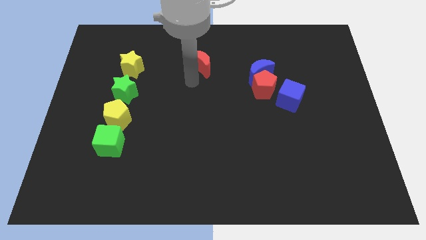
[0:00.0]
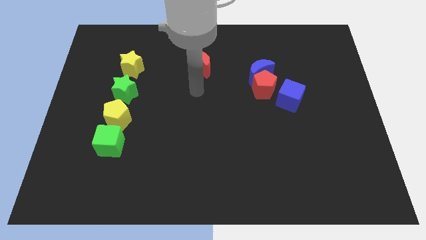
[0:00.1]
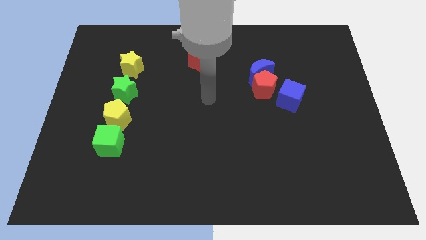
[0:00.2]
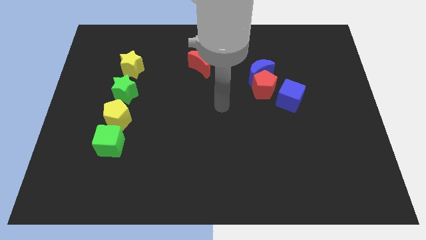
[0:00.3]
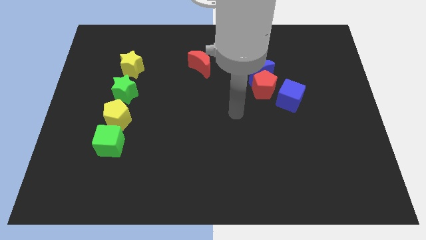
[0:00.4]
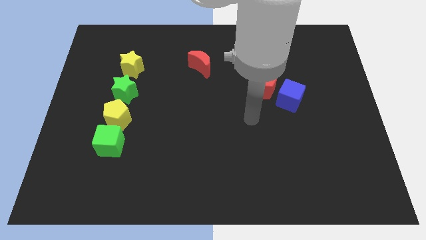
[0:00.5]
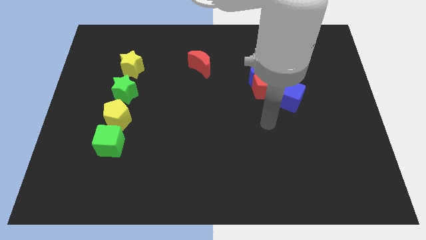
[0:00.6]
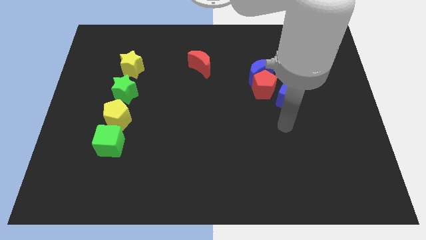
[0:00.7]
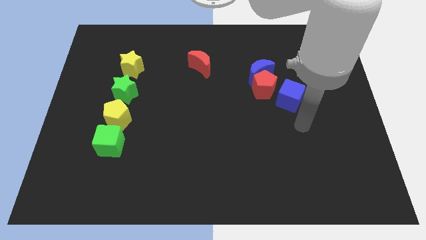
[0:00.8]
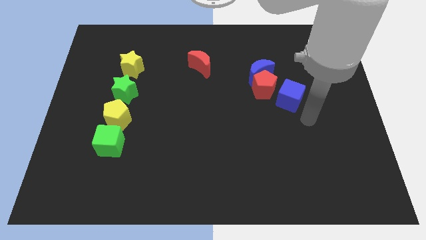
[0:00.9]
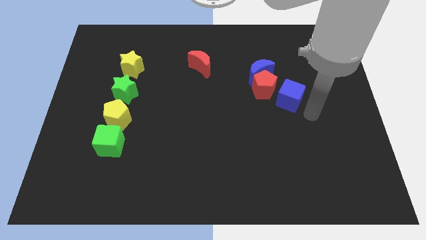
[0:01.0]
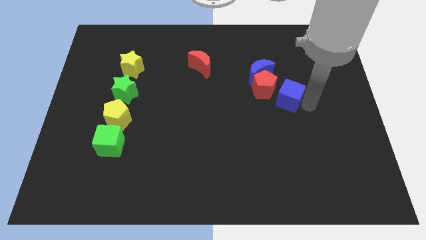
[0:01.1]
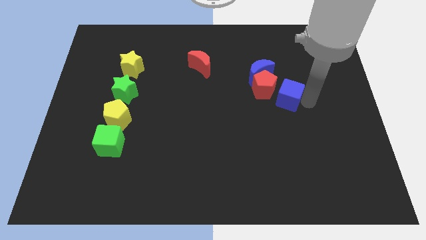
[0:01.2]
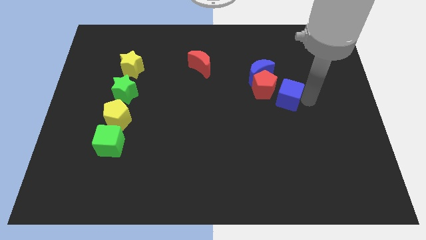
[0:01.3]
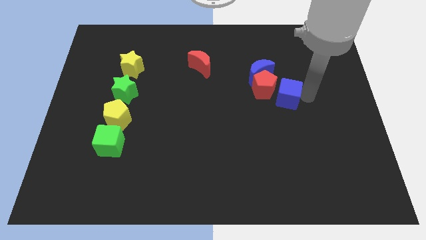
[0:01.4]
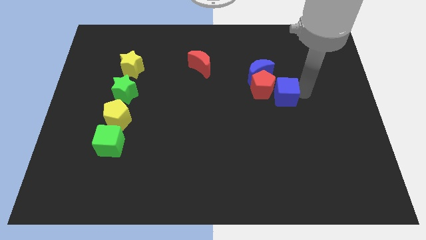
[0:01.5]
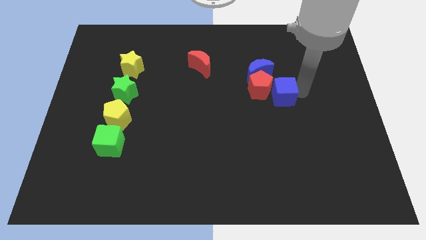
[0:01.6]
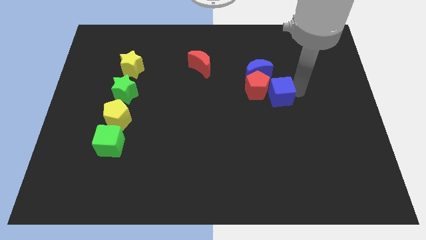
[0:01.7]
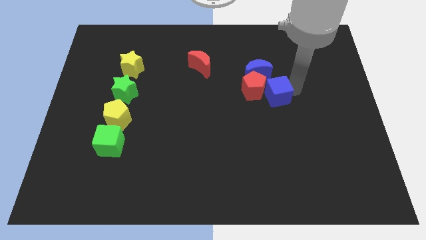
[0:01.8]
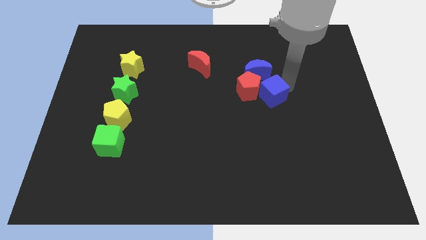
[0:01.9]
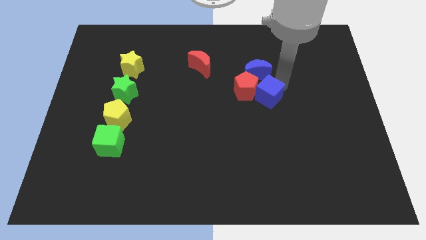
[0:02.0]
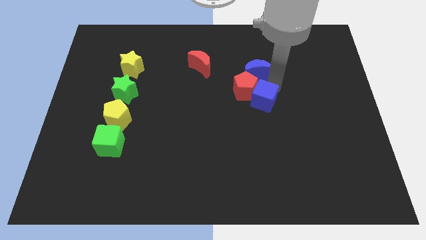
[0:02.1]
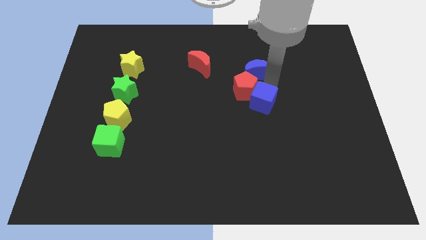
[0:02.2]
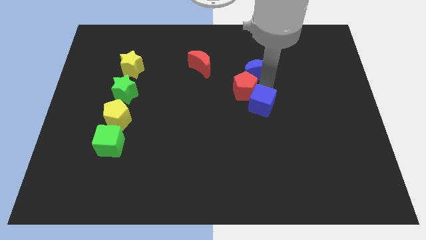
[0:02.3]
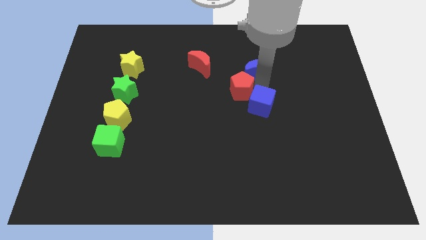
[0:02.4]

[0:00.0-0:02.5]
push the blue cube into the red pentagon

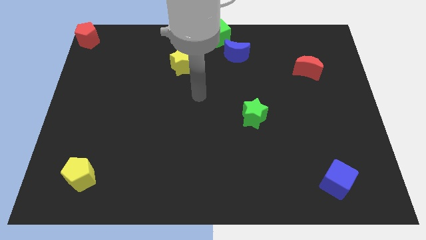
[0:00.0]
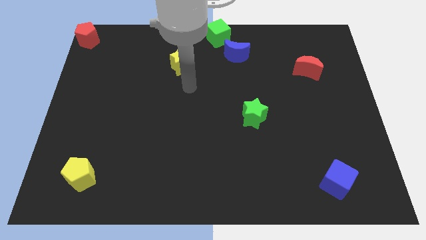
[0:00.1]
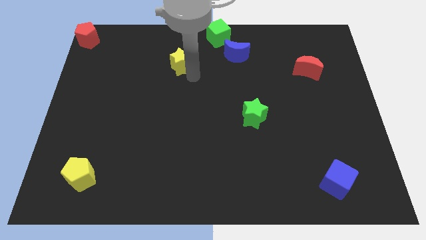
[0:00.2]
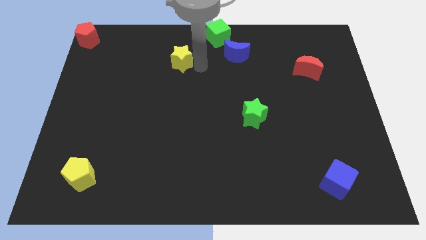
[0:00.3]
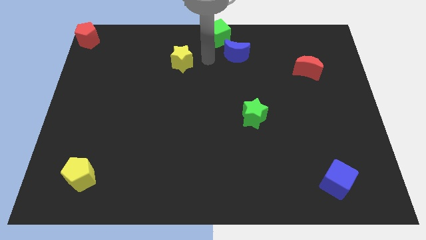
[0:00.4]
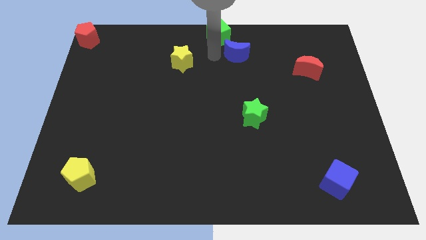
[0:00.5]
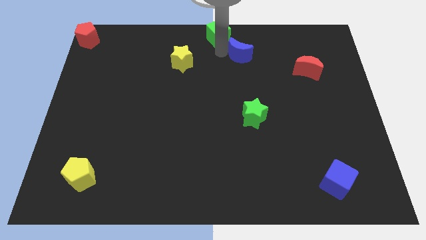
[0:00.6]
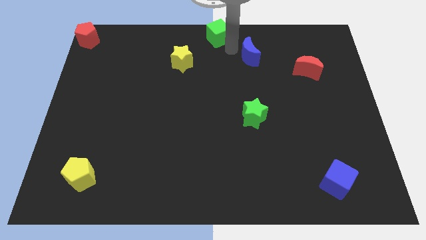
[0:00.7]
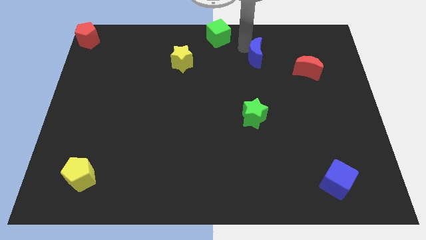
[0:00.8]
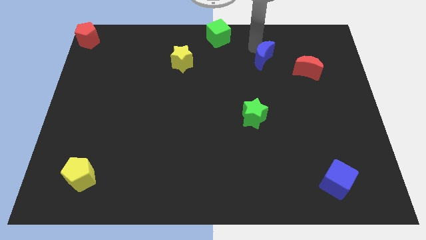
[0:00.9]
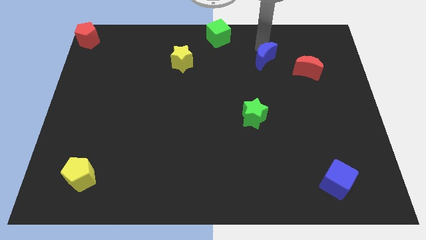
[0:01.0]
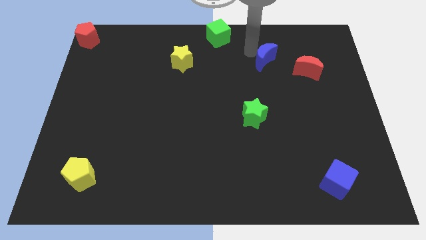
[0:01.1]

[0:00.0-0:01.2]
separate the green cube and blue moon

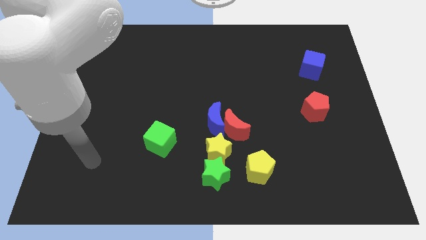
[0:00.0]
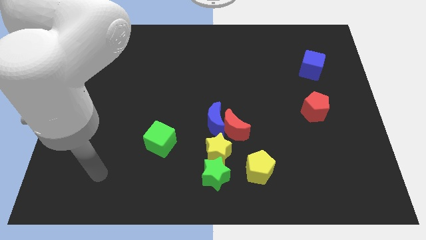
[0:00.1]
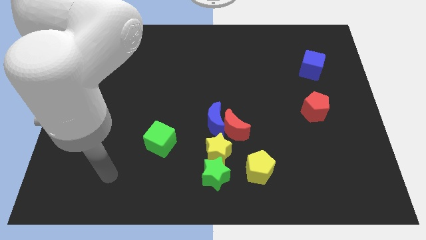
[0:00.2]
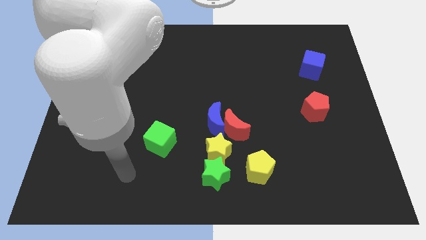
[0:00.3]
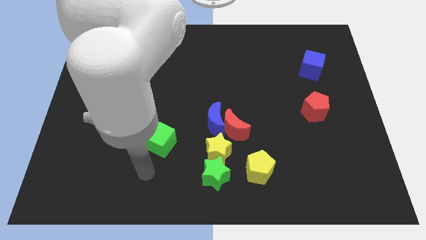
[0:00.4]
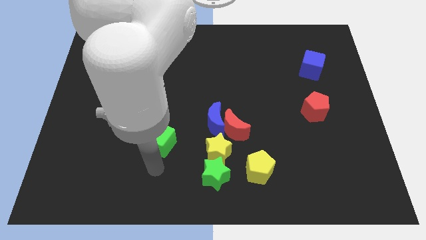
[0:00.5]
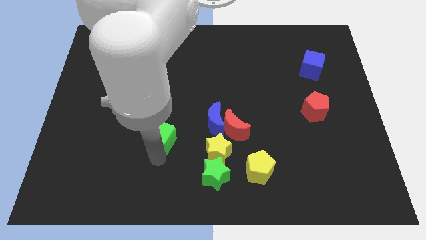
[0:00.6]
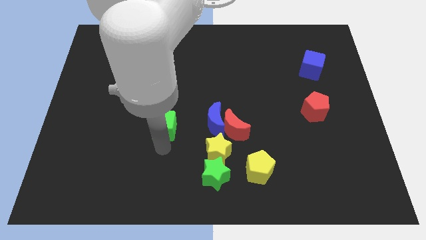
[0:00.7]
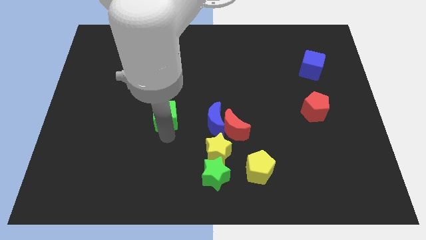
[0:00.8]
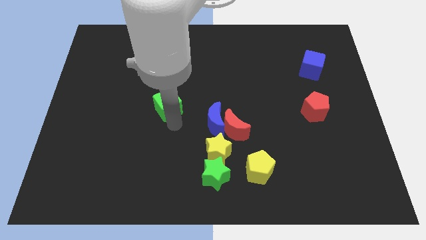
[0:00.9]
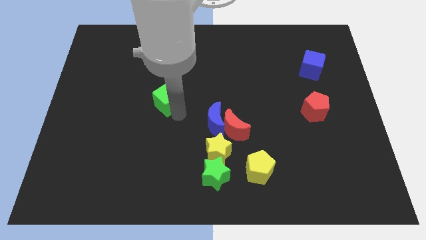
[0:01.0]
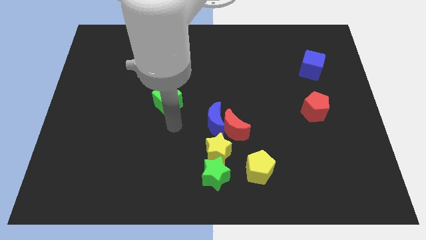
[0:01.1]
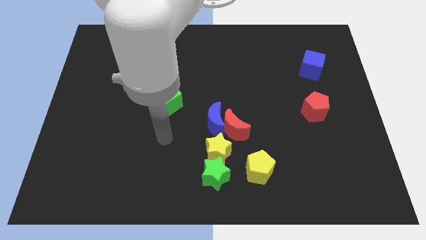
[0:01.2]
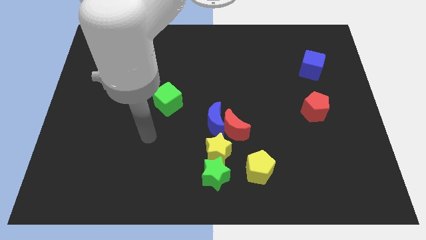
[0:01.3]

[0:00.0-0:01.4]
slightly move the green cube towards top

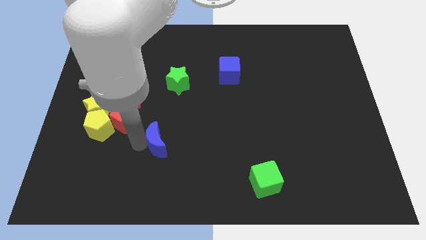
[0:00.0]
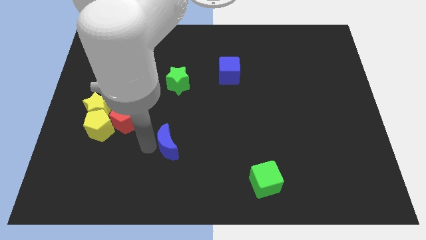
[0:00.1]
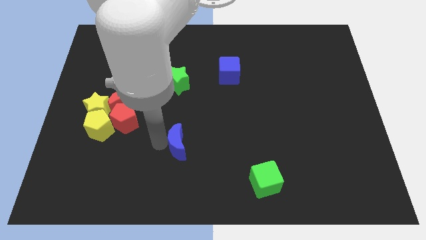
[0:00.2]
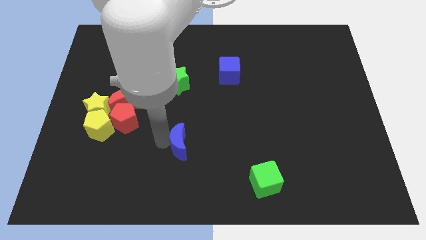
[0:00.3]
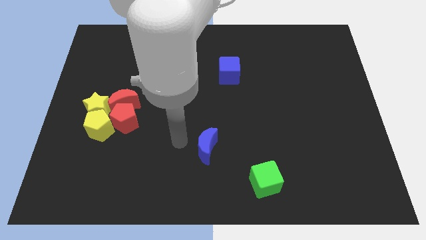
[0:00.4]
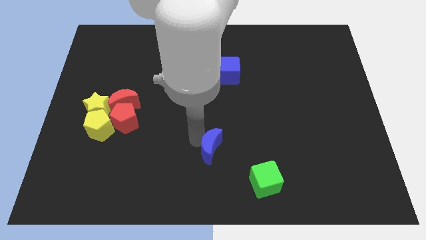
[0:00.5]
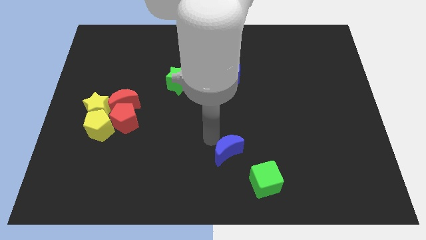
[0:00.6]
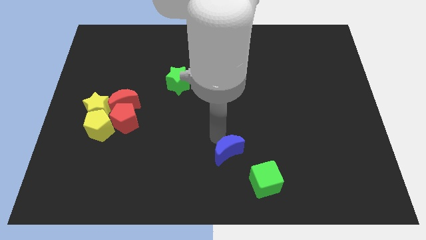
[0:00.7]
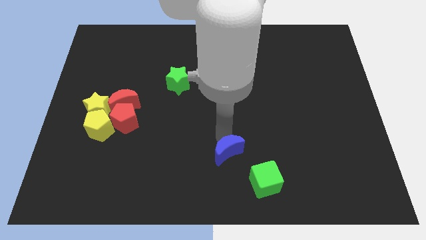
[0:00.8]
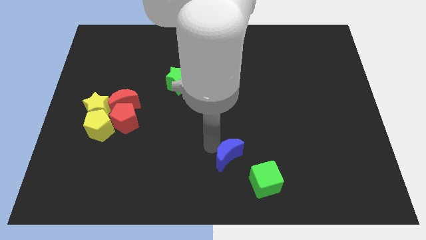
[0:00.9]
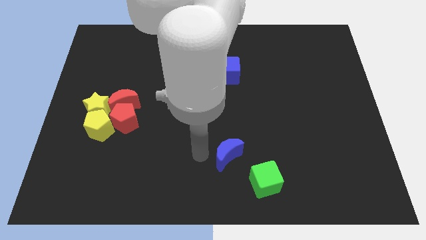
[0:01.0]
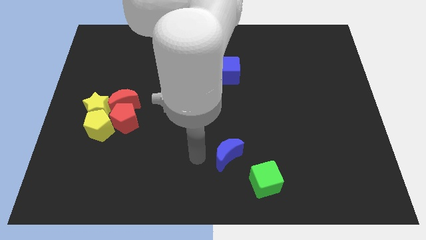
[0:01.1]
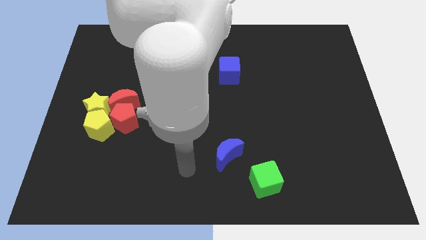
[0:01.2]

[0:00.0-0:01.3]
place the blue moon below the blue cube

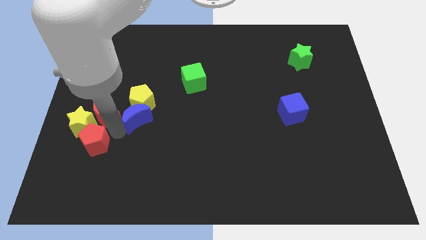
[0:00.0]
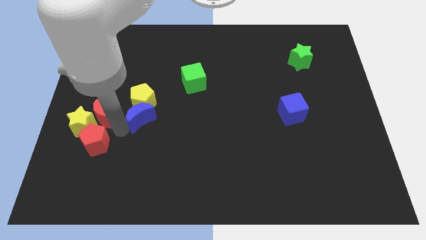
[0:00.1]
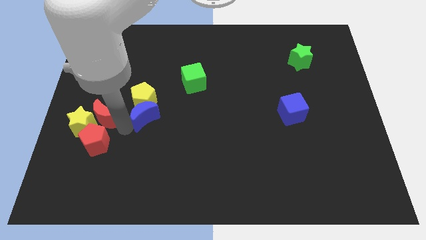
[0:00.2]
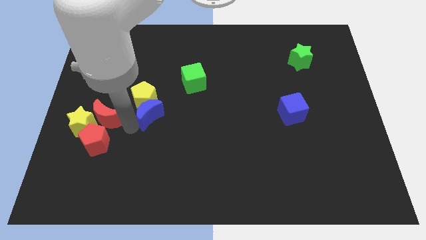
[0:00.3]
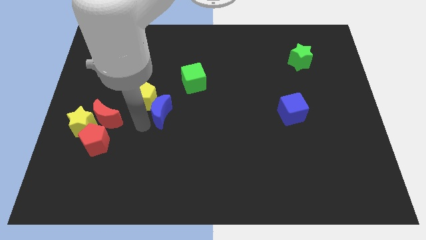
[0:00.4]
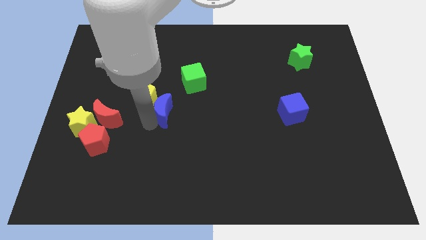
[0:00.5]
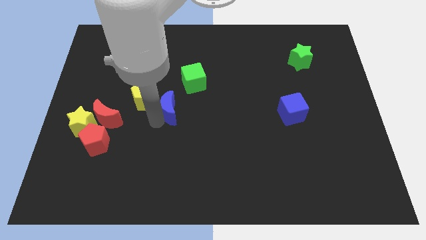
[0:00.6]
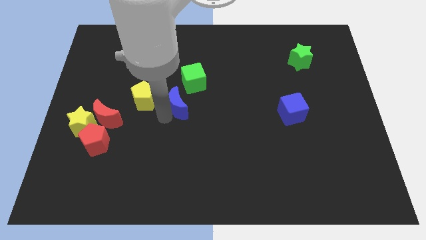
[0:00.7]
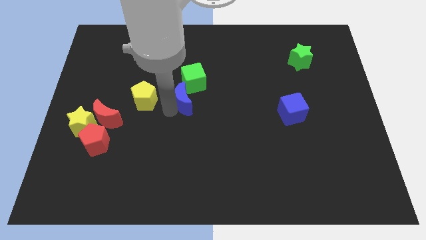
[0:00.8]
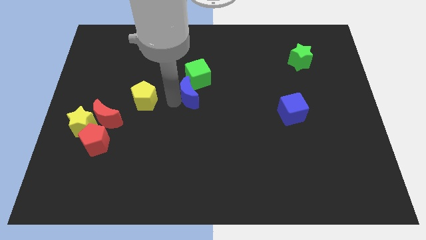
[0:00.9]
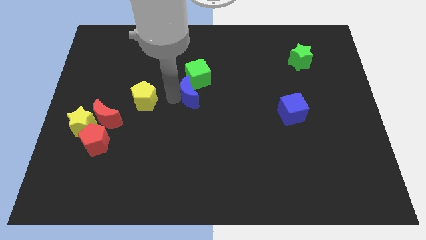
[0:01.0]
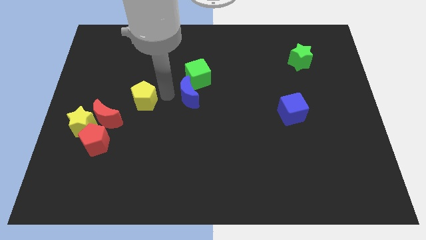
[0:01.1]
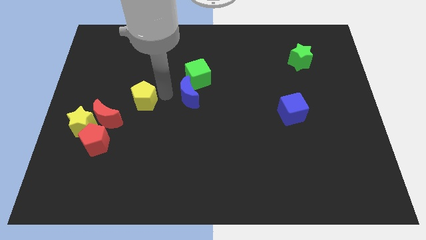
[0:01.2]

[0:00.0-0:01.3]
push the blue moon into the green cube

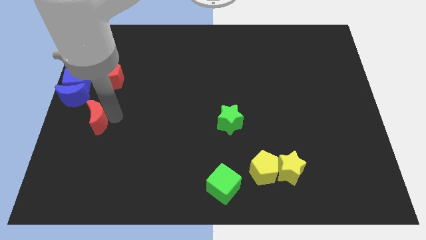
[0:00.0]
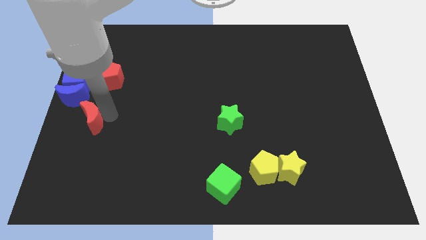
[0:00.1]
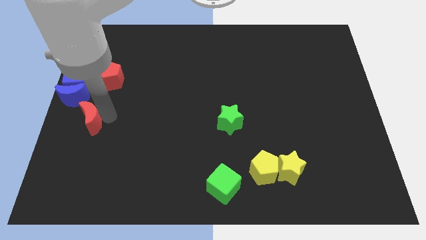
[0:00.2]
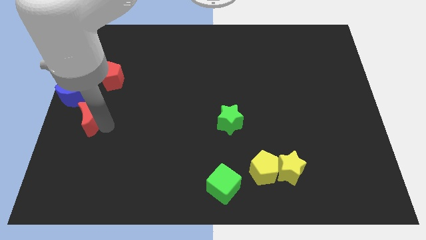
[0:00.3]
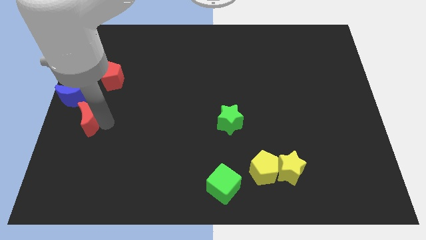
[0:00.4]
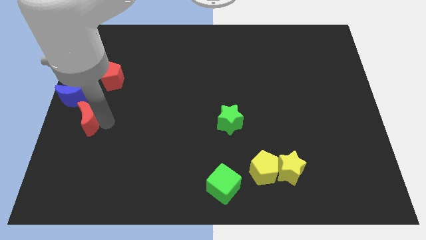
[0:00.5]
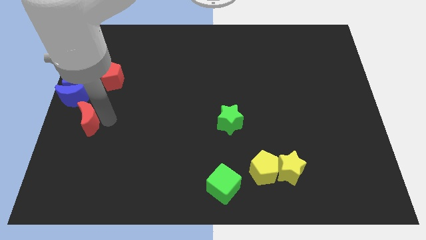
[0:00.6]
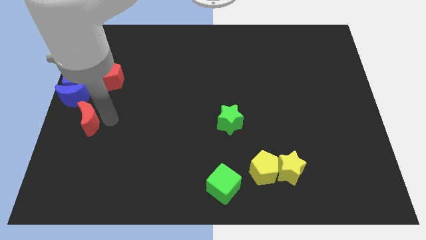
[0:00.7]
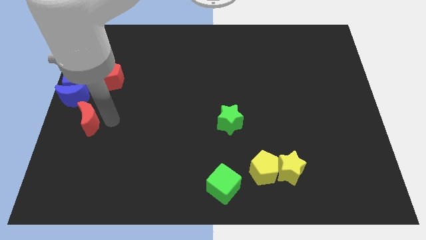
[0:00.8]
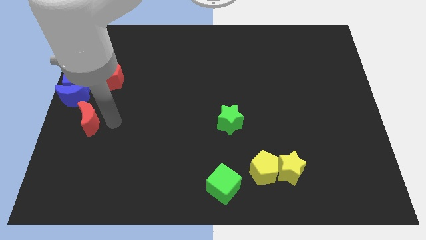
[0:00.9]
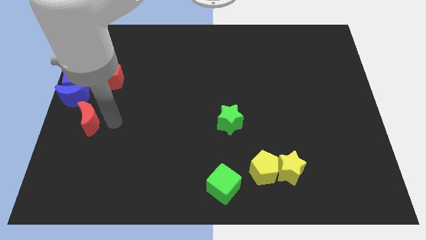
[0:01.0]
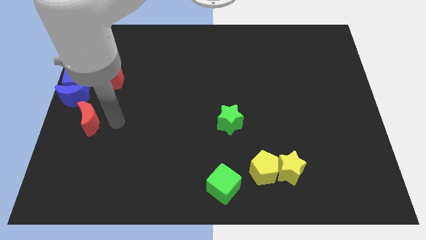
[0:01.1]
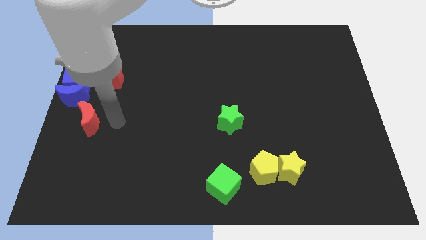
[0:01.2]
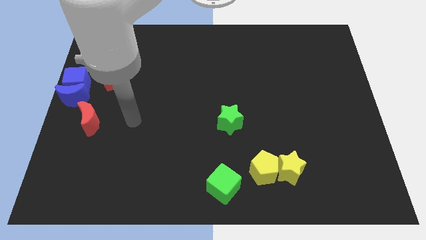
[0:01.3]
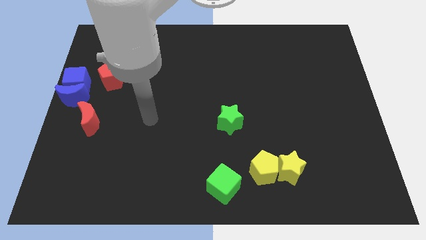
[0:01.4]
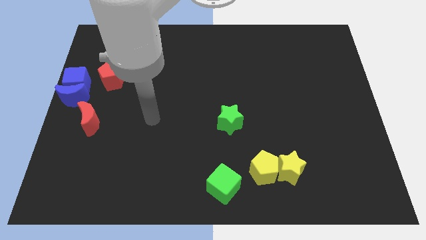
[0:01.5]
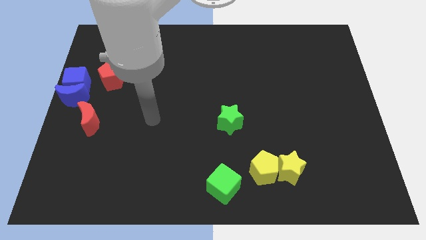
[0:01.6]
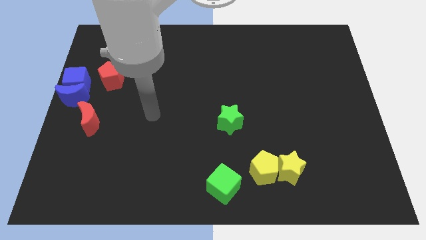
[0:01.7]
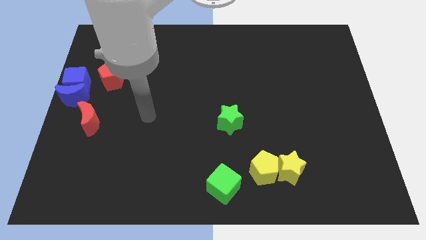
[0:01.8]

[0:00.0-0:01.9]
move the red moon slightly towards left
